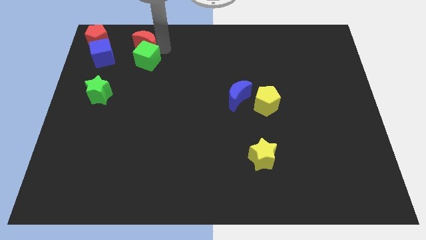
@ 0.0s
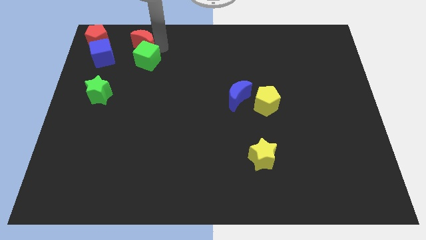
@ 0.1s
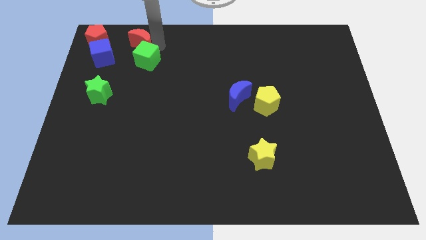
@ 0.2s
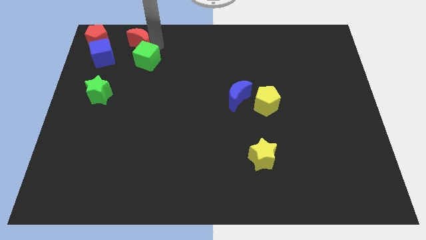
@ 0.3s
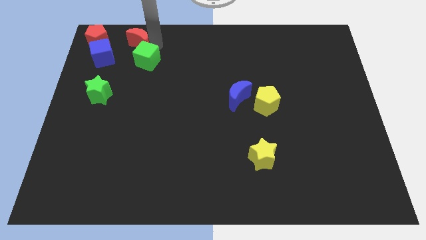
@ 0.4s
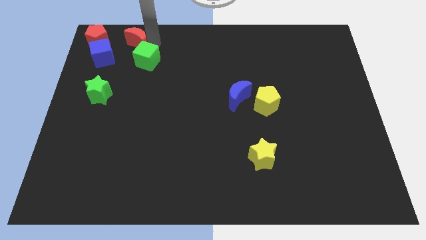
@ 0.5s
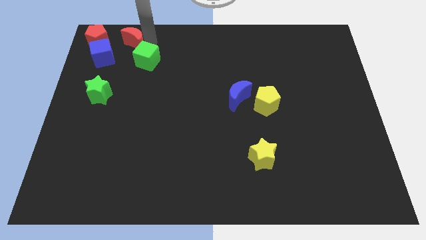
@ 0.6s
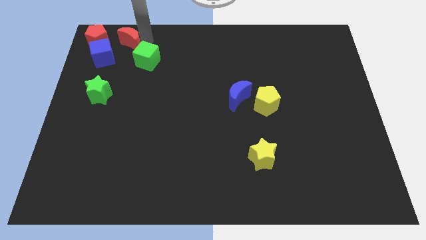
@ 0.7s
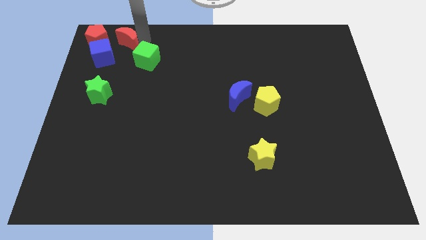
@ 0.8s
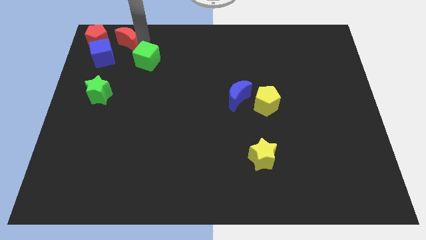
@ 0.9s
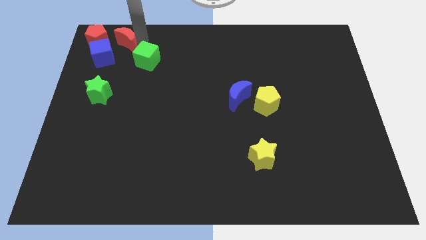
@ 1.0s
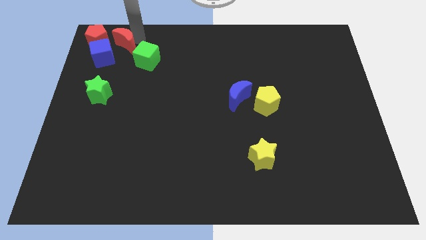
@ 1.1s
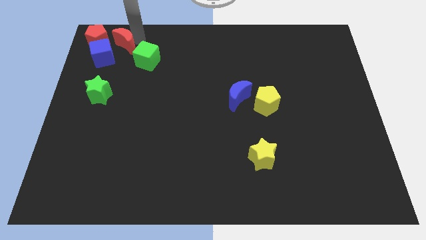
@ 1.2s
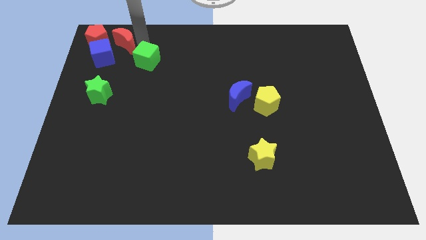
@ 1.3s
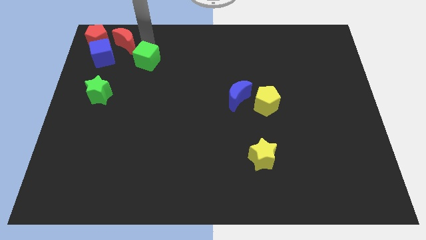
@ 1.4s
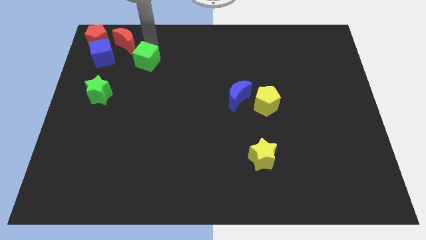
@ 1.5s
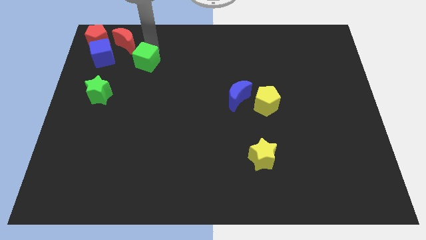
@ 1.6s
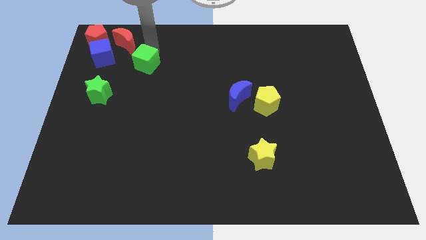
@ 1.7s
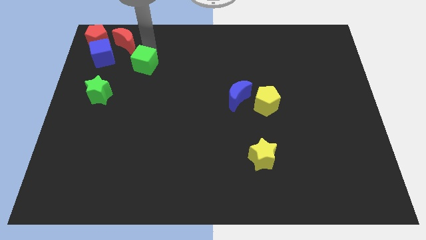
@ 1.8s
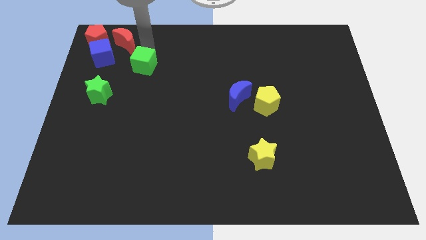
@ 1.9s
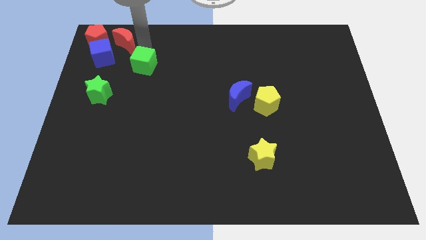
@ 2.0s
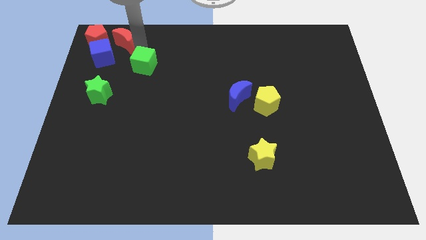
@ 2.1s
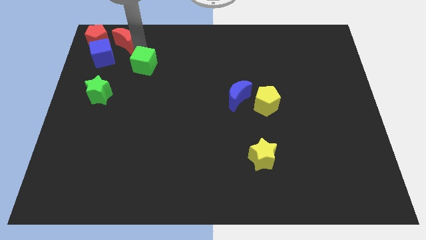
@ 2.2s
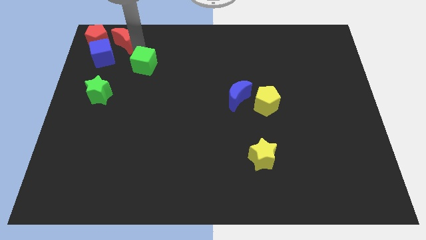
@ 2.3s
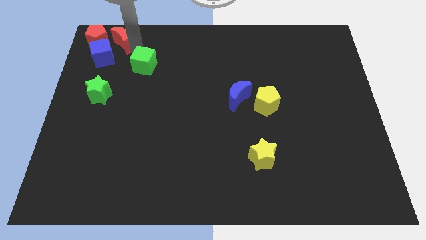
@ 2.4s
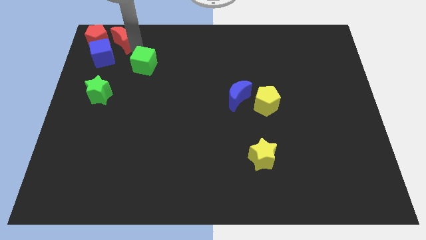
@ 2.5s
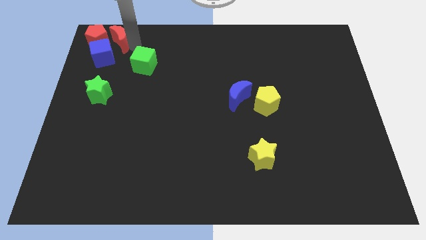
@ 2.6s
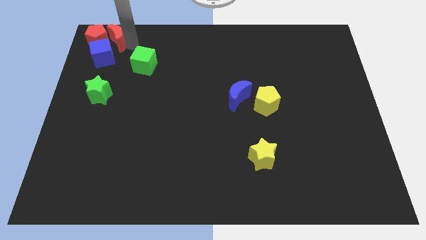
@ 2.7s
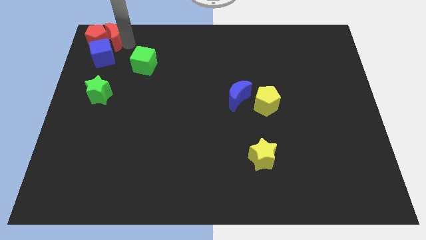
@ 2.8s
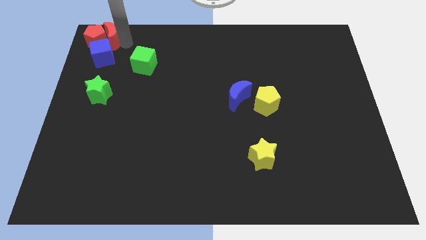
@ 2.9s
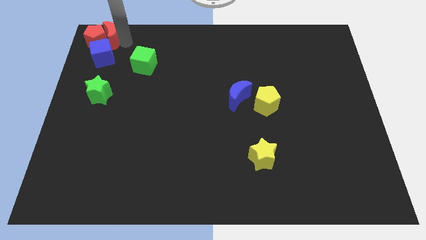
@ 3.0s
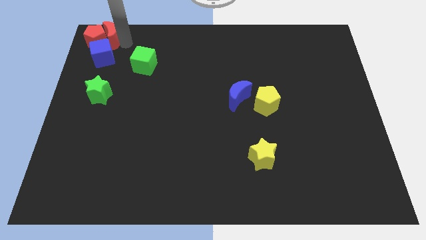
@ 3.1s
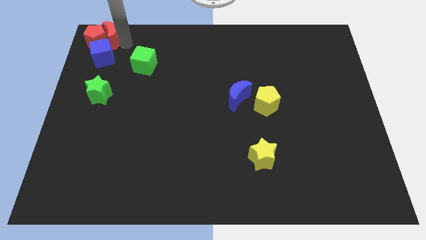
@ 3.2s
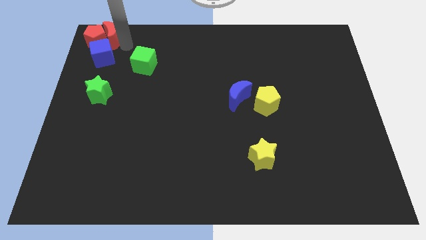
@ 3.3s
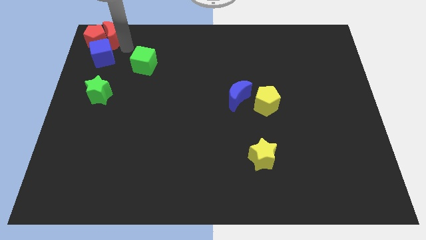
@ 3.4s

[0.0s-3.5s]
adjust the red crescent at the right side of the red pentagon

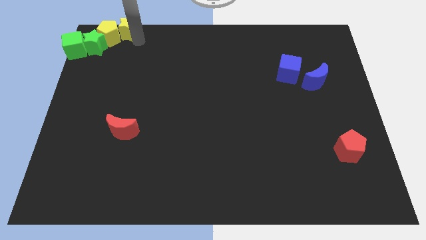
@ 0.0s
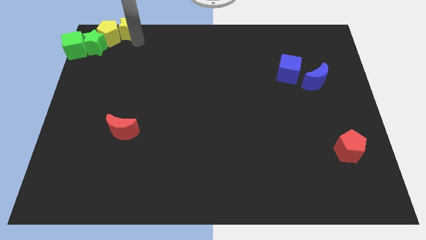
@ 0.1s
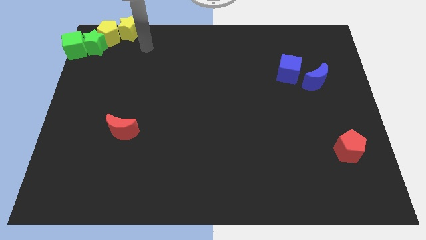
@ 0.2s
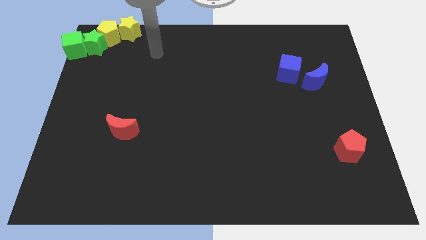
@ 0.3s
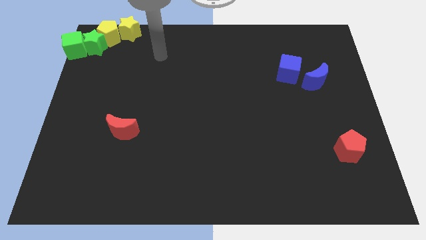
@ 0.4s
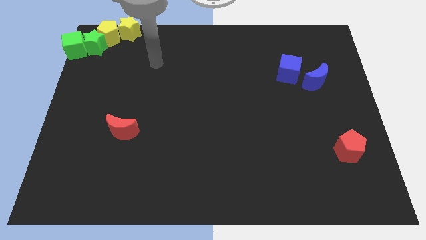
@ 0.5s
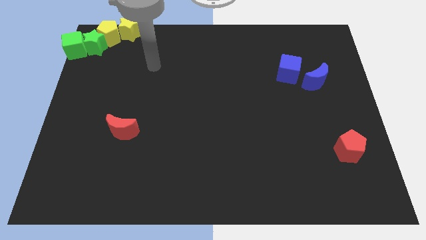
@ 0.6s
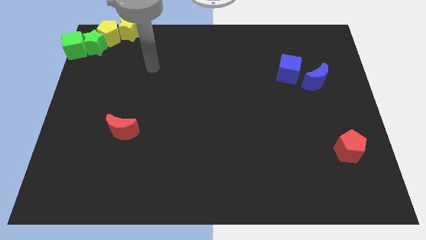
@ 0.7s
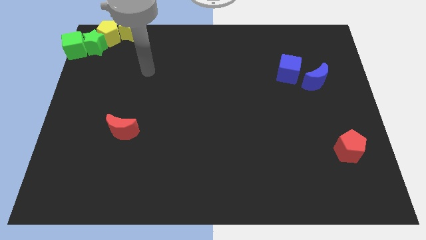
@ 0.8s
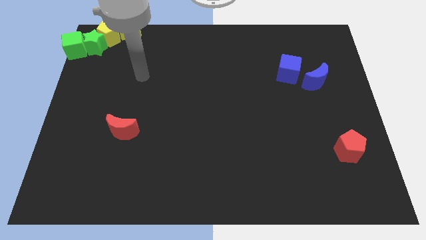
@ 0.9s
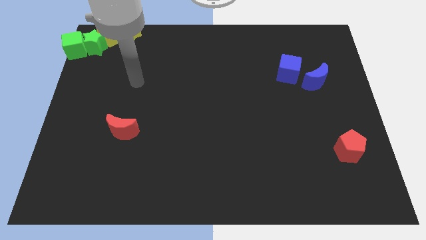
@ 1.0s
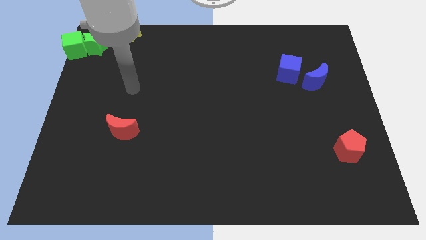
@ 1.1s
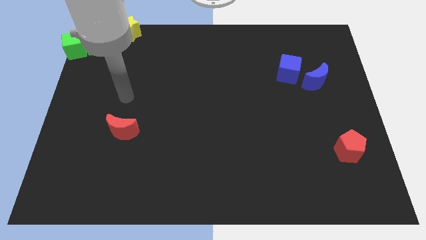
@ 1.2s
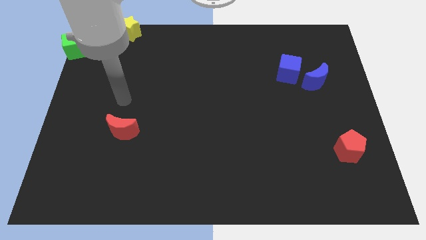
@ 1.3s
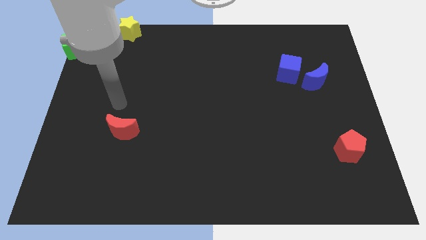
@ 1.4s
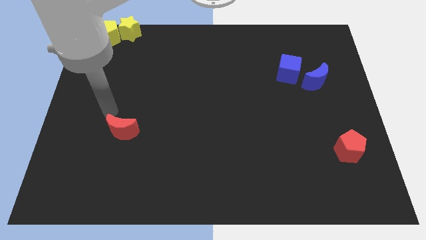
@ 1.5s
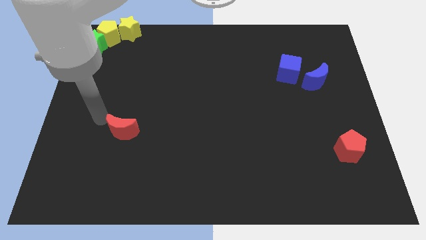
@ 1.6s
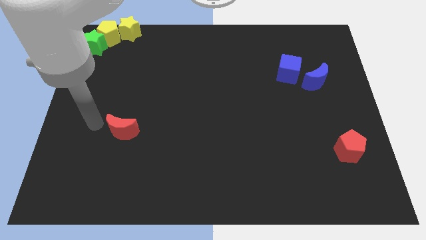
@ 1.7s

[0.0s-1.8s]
move away from the yellow star

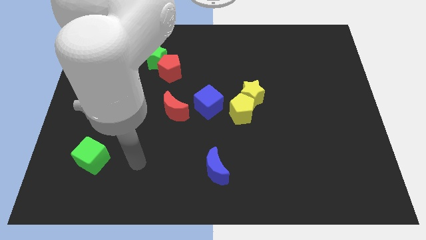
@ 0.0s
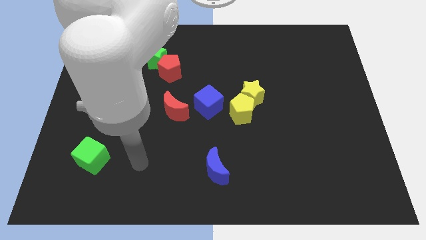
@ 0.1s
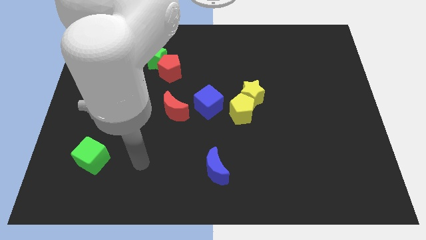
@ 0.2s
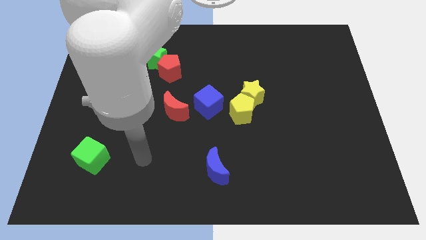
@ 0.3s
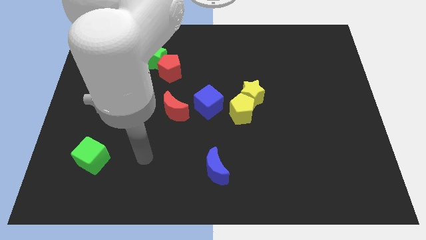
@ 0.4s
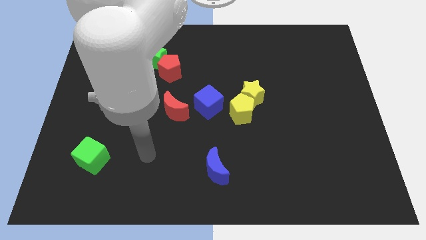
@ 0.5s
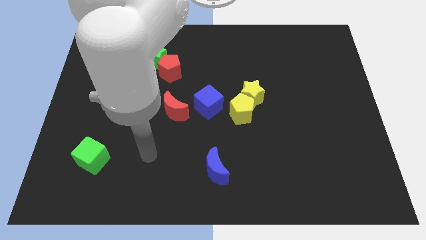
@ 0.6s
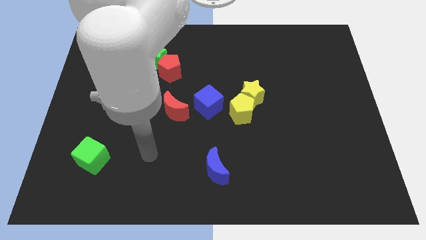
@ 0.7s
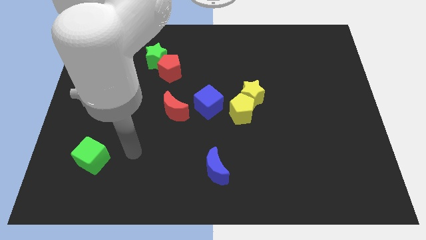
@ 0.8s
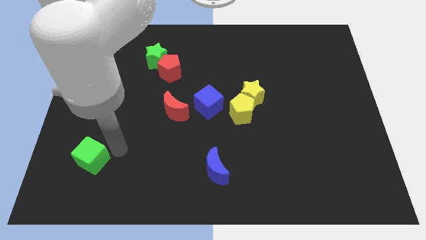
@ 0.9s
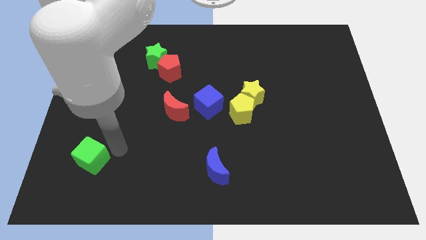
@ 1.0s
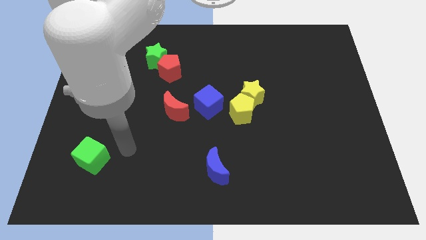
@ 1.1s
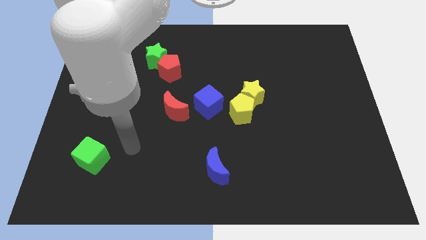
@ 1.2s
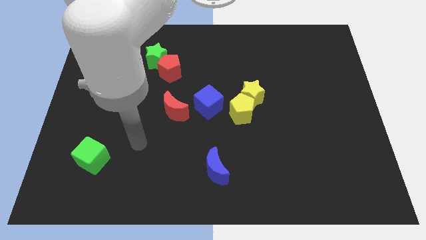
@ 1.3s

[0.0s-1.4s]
move your arm towards the green cube

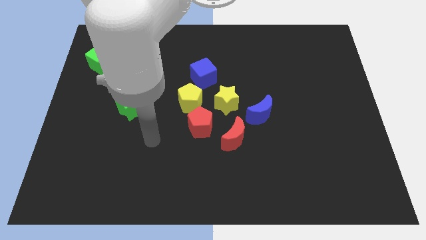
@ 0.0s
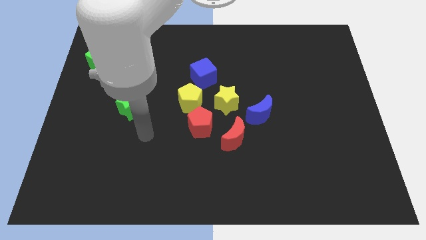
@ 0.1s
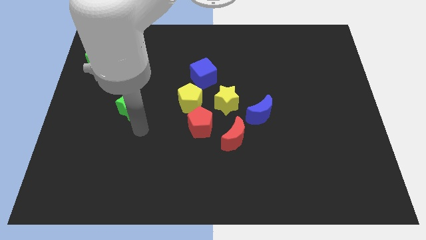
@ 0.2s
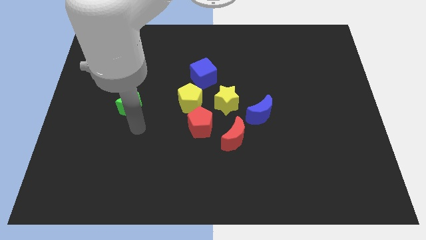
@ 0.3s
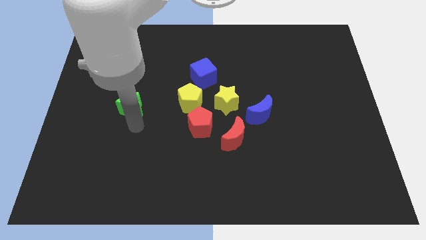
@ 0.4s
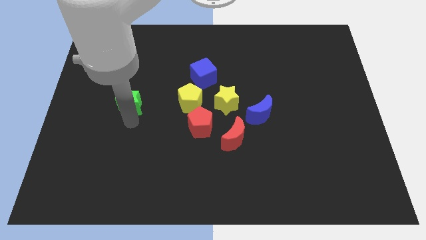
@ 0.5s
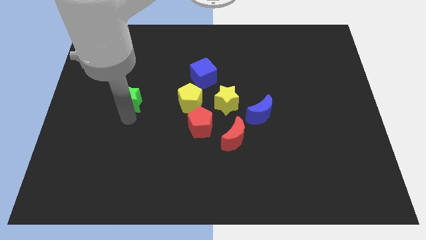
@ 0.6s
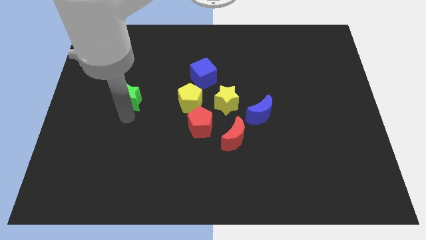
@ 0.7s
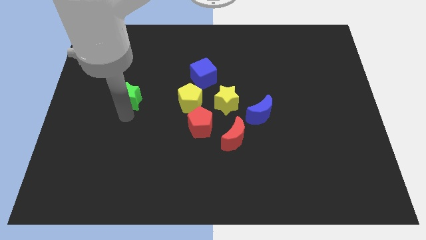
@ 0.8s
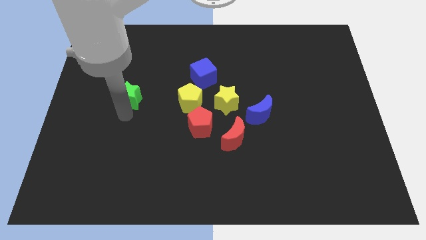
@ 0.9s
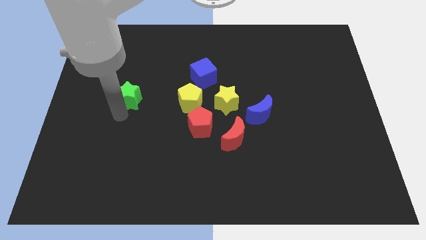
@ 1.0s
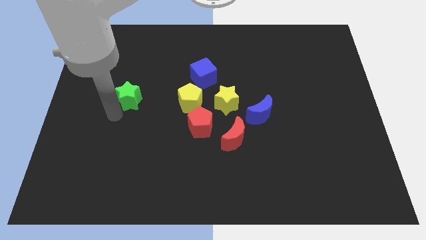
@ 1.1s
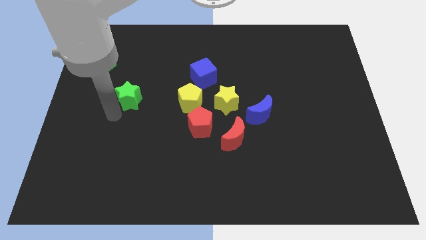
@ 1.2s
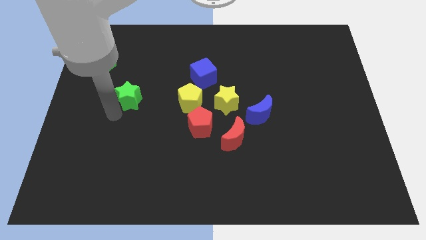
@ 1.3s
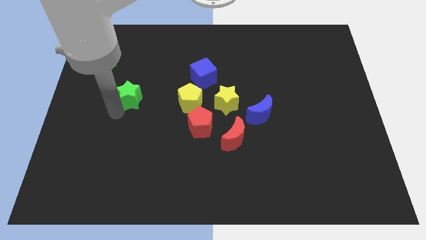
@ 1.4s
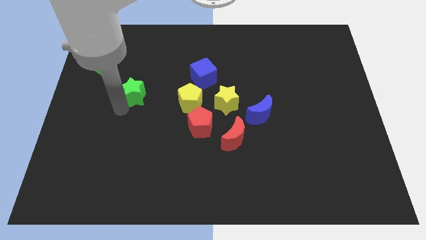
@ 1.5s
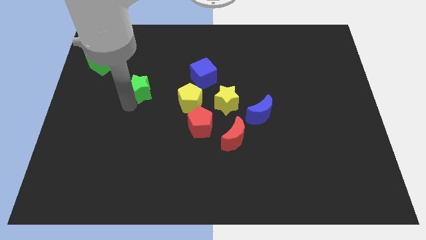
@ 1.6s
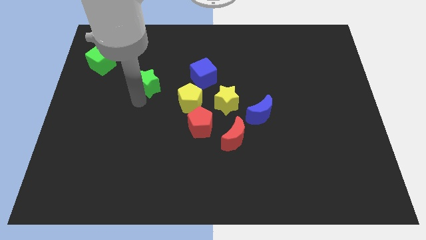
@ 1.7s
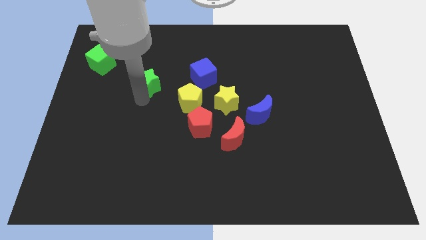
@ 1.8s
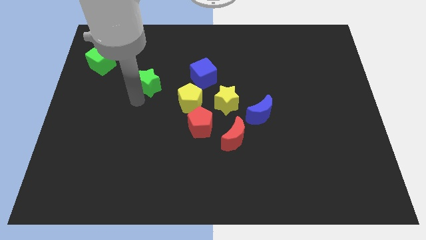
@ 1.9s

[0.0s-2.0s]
push the green star slightly to the top of the board

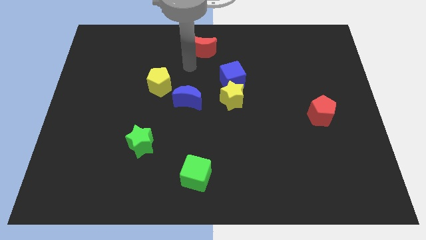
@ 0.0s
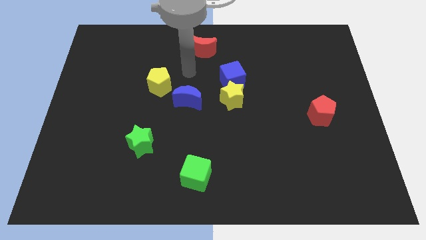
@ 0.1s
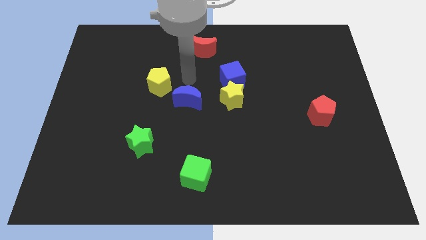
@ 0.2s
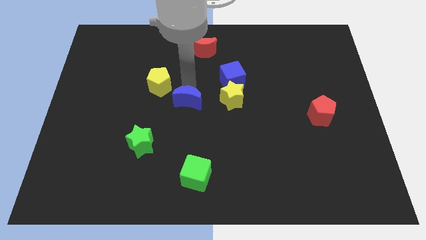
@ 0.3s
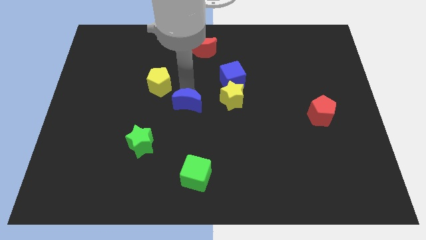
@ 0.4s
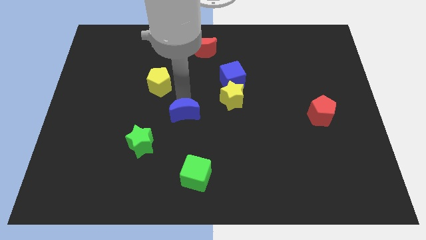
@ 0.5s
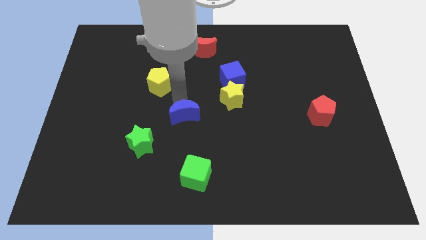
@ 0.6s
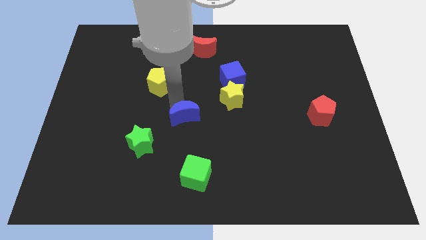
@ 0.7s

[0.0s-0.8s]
move the blue moon down slightly
